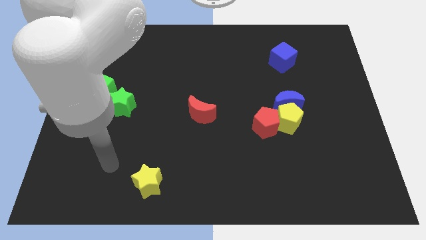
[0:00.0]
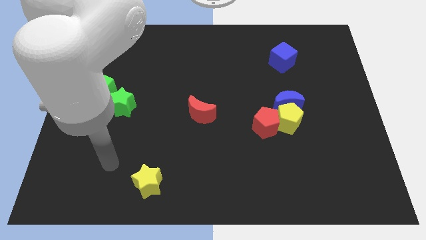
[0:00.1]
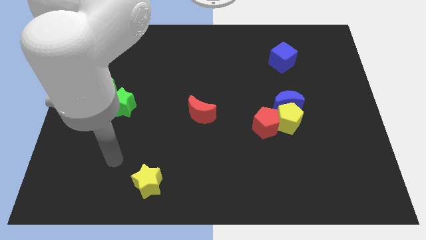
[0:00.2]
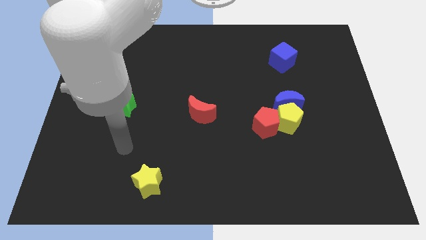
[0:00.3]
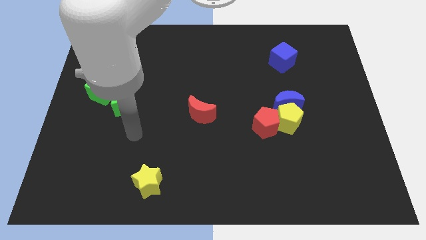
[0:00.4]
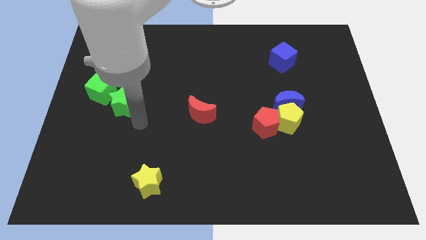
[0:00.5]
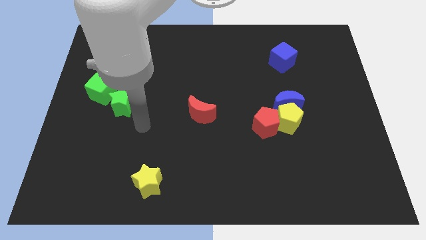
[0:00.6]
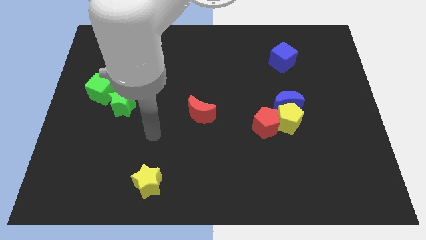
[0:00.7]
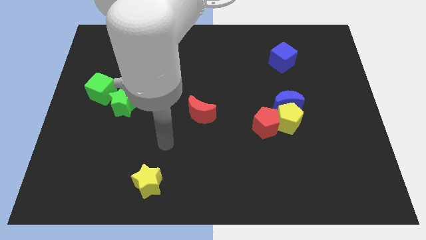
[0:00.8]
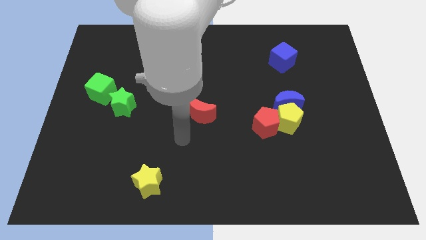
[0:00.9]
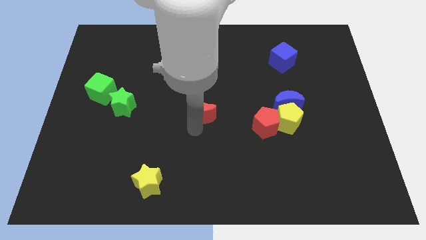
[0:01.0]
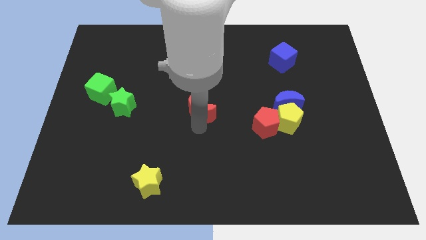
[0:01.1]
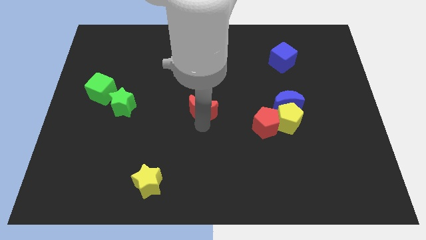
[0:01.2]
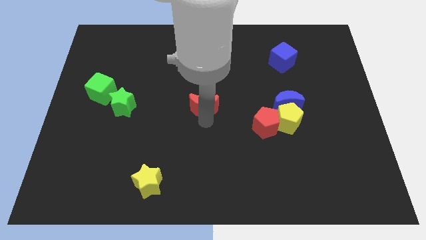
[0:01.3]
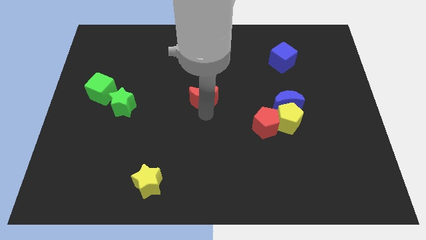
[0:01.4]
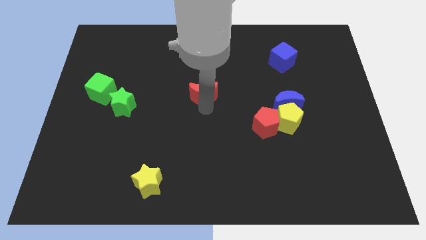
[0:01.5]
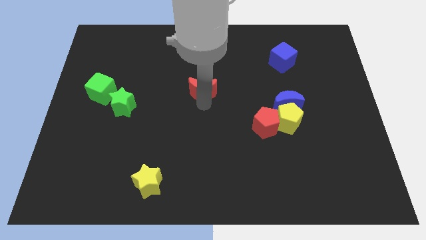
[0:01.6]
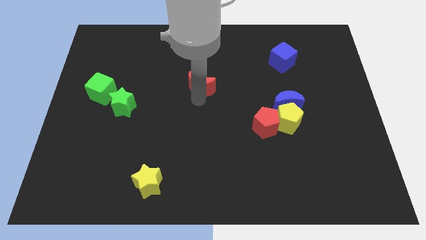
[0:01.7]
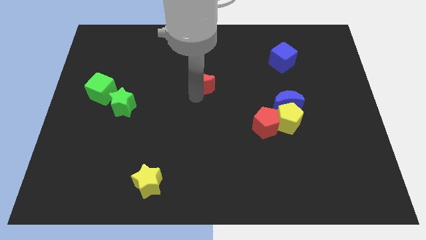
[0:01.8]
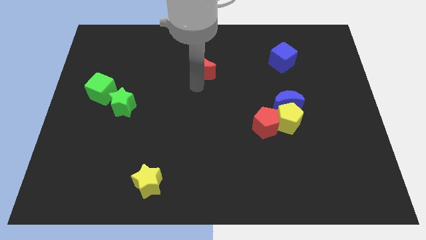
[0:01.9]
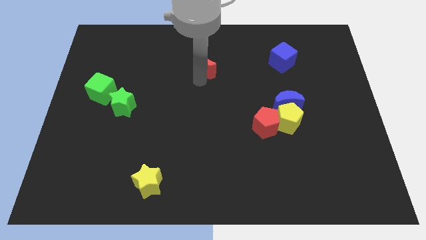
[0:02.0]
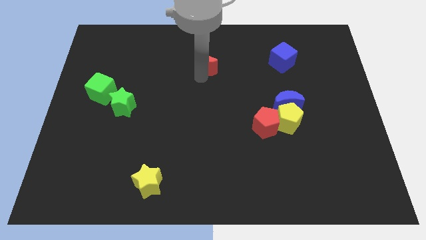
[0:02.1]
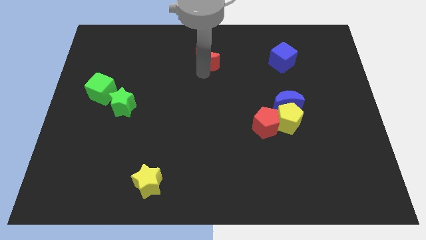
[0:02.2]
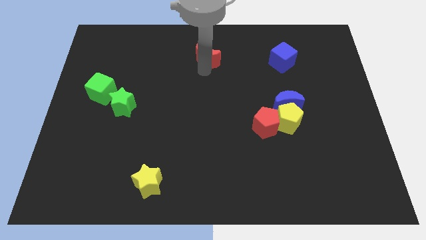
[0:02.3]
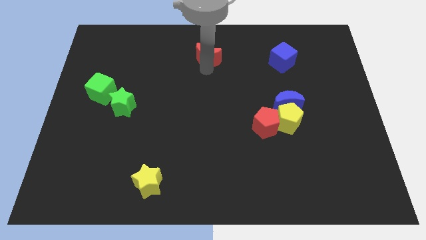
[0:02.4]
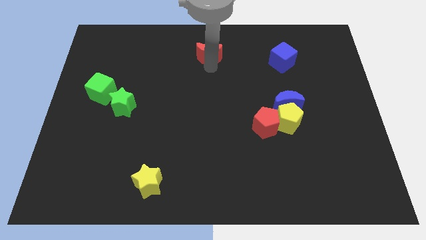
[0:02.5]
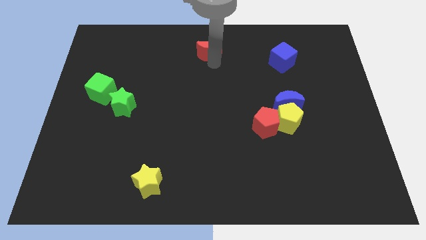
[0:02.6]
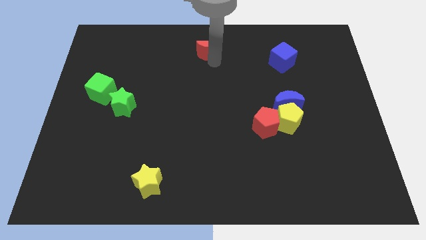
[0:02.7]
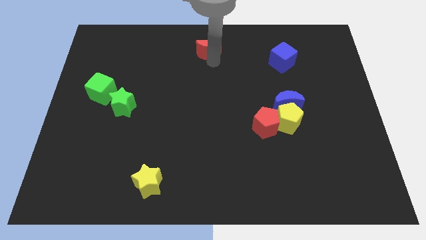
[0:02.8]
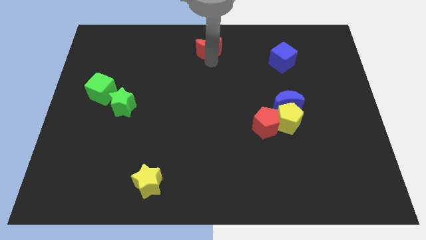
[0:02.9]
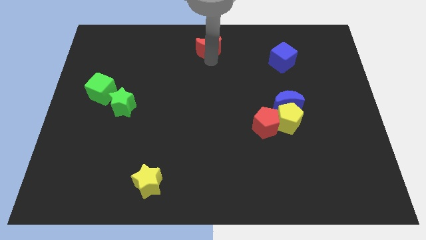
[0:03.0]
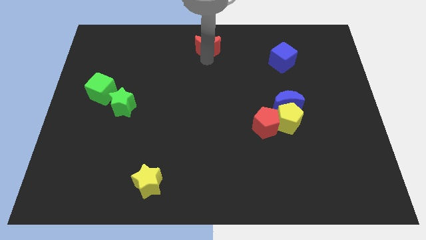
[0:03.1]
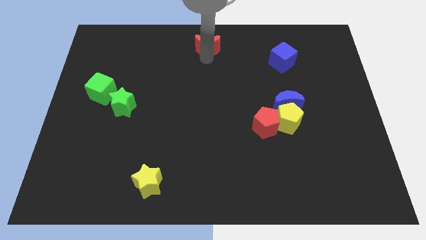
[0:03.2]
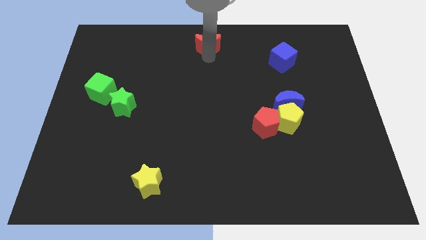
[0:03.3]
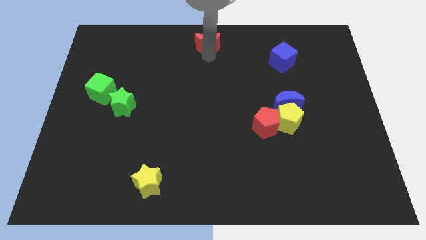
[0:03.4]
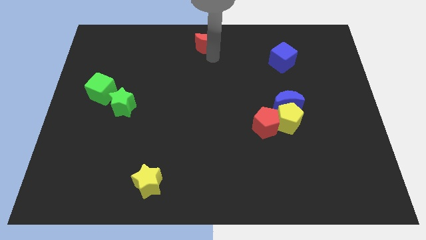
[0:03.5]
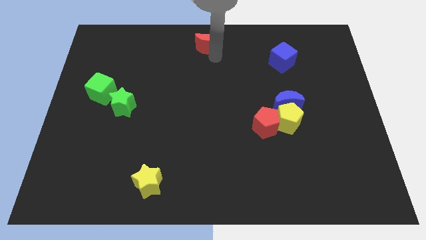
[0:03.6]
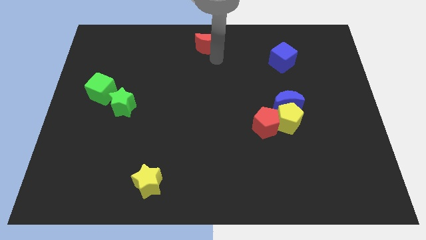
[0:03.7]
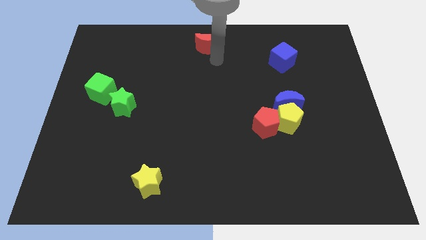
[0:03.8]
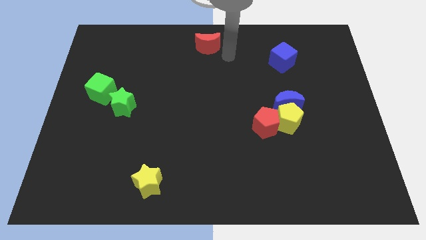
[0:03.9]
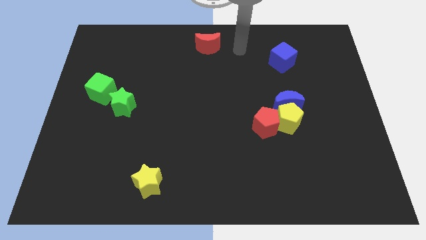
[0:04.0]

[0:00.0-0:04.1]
push red moon to the top center

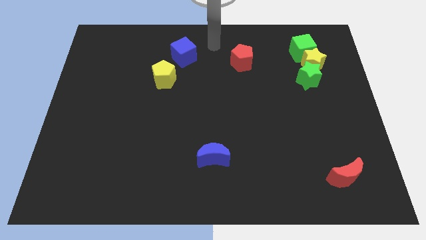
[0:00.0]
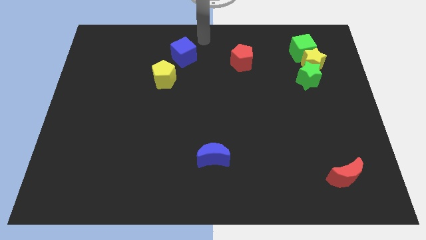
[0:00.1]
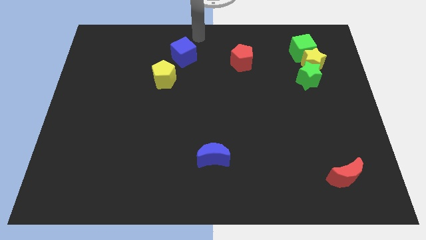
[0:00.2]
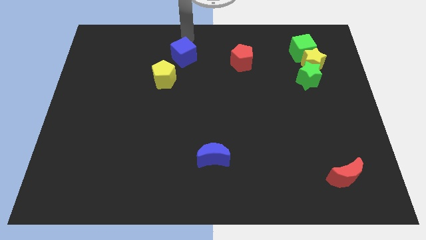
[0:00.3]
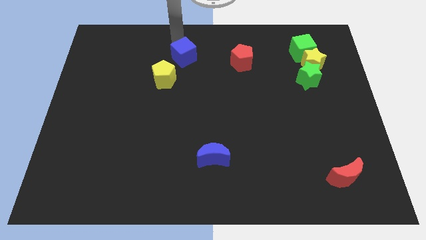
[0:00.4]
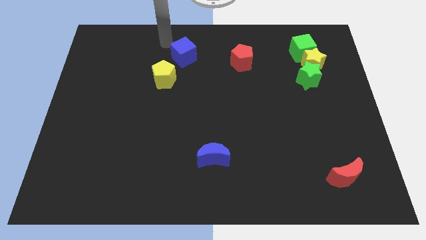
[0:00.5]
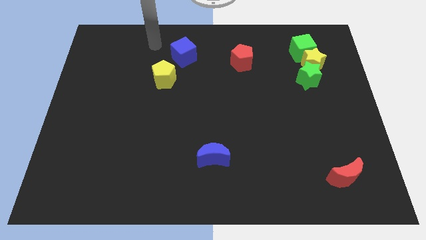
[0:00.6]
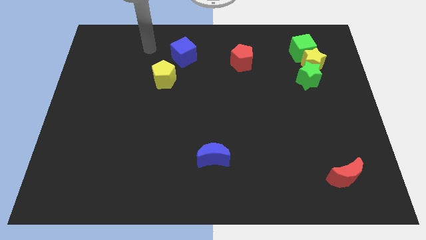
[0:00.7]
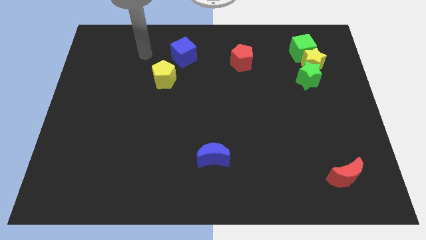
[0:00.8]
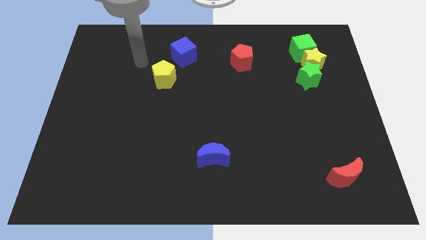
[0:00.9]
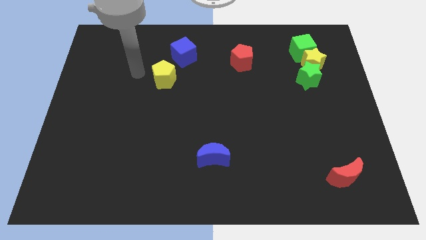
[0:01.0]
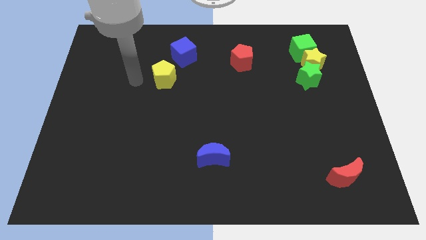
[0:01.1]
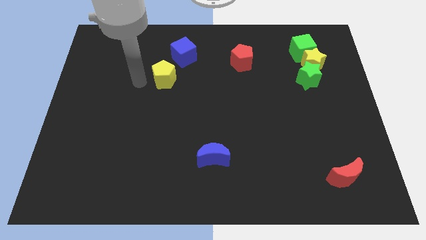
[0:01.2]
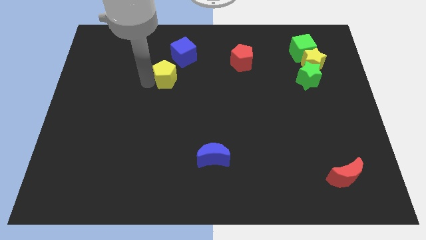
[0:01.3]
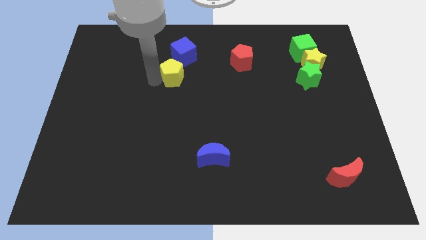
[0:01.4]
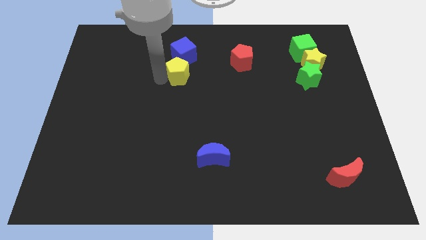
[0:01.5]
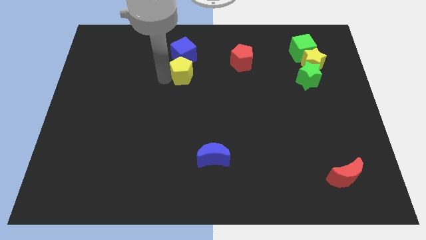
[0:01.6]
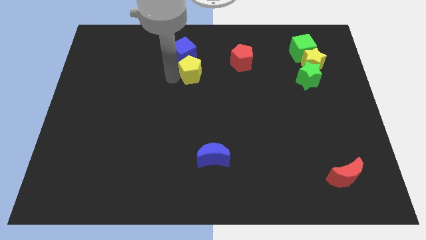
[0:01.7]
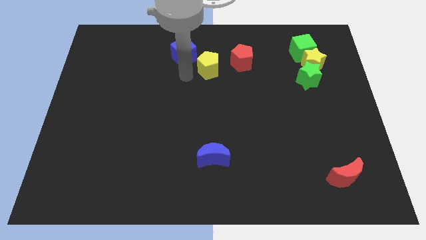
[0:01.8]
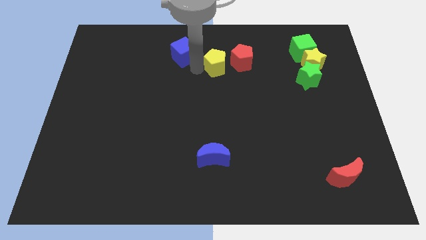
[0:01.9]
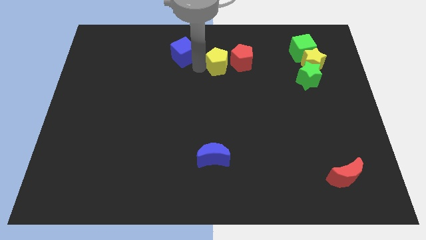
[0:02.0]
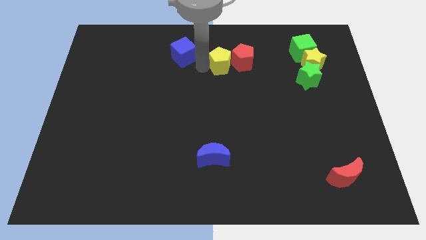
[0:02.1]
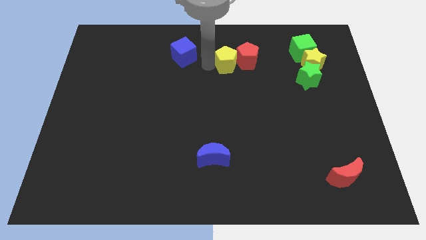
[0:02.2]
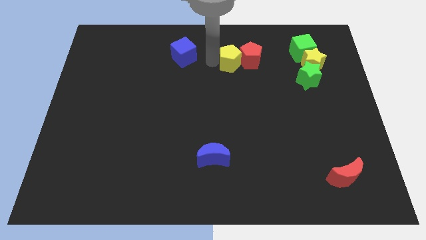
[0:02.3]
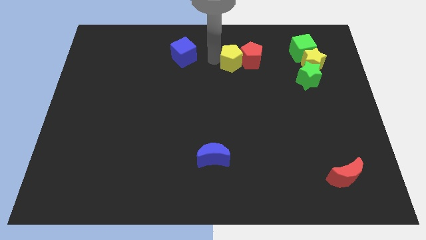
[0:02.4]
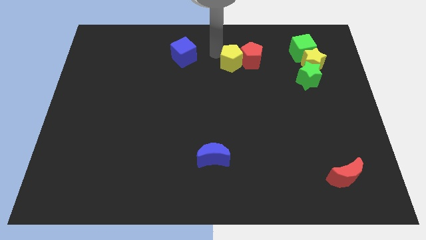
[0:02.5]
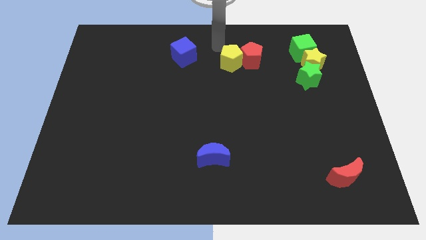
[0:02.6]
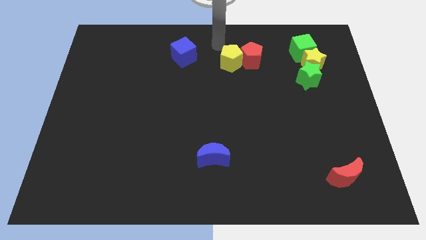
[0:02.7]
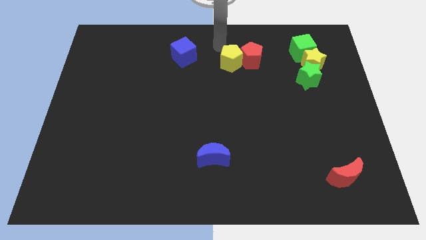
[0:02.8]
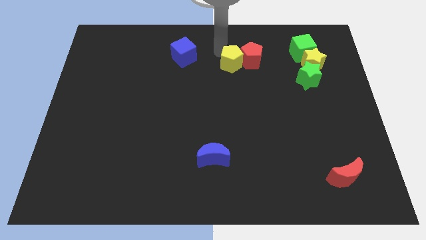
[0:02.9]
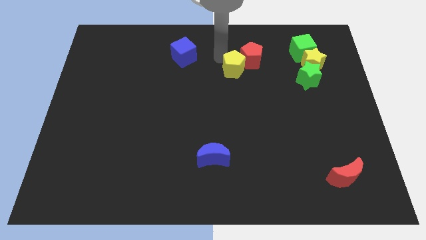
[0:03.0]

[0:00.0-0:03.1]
move the yellow pentagon into the red pentagon

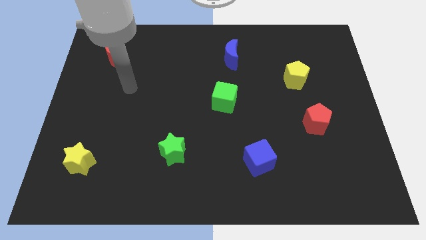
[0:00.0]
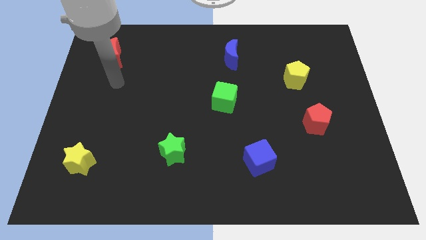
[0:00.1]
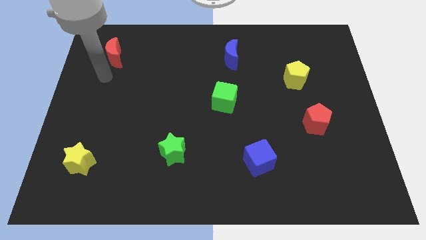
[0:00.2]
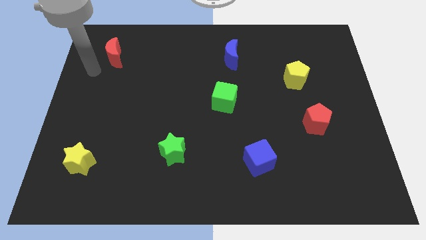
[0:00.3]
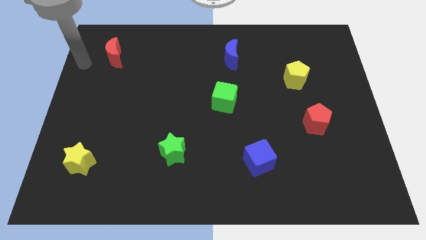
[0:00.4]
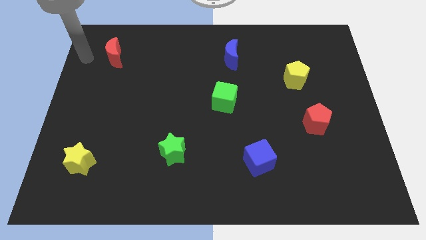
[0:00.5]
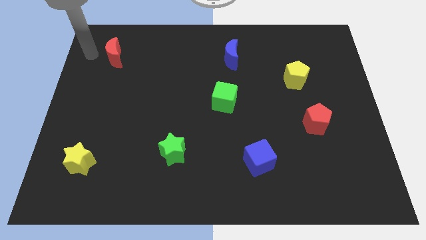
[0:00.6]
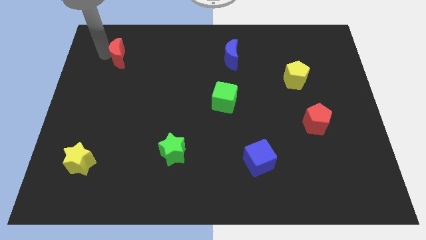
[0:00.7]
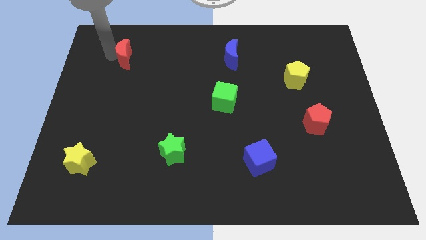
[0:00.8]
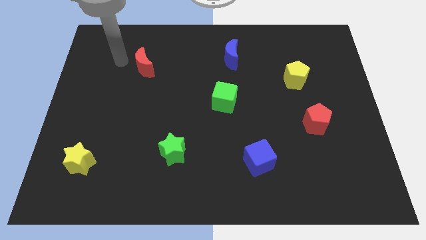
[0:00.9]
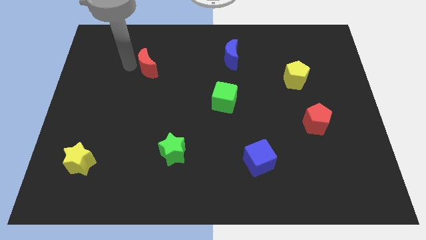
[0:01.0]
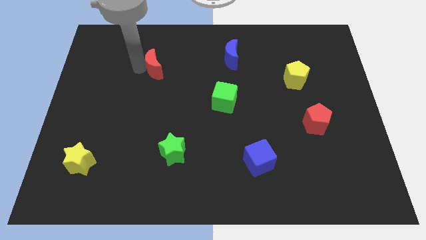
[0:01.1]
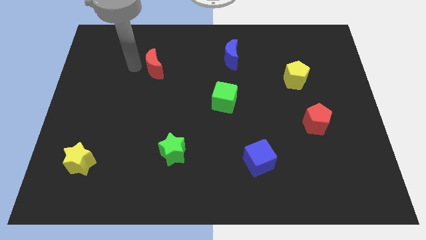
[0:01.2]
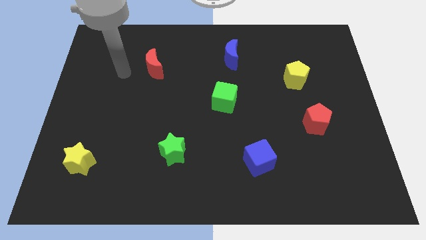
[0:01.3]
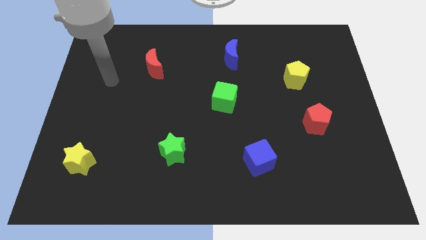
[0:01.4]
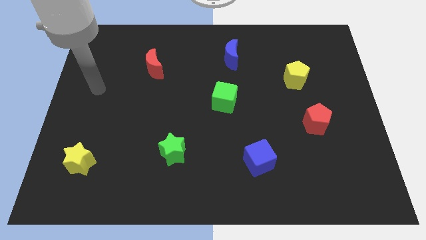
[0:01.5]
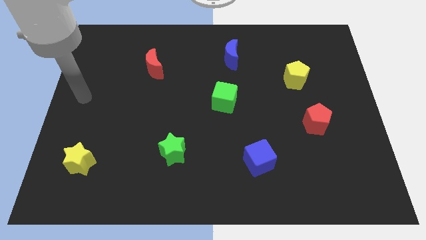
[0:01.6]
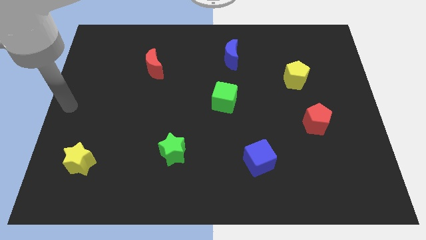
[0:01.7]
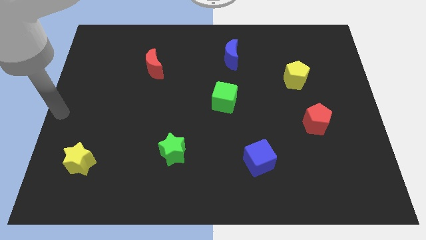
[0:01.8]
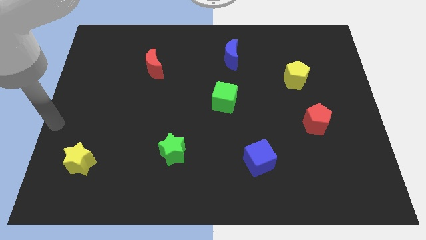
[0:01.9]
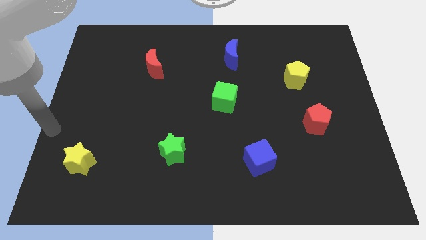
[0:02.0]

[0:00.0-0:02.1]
move red moon slightly towards center of the board
